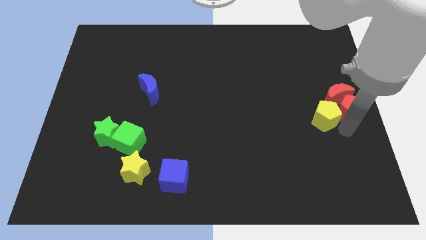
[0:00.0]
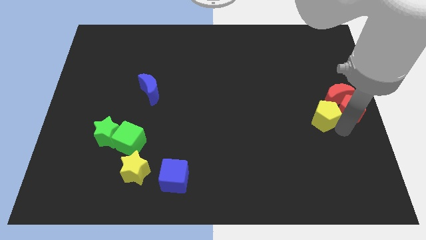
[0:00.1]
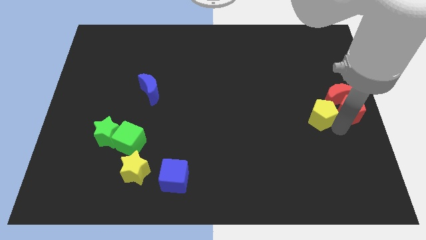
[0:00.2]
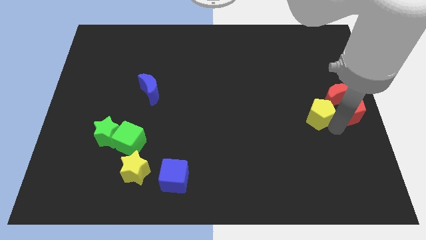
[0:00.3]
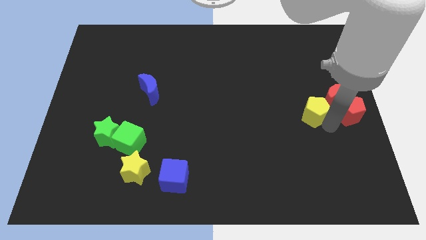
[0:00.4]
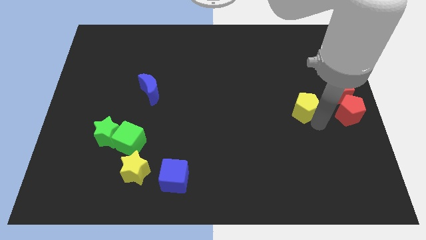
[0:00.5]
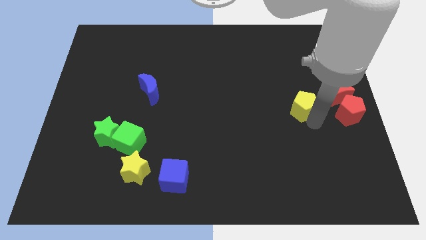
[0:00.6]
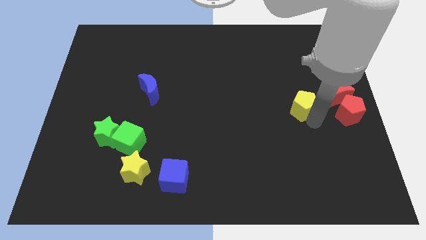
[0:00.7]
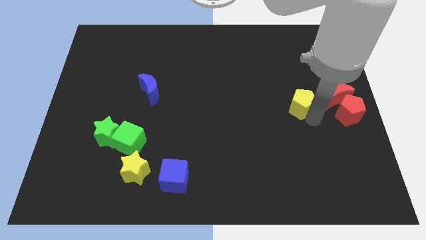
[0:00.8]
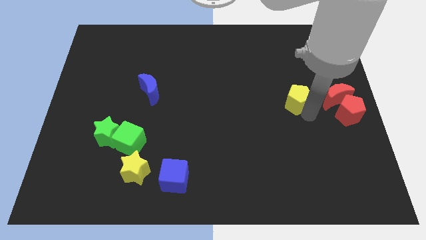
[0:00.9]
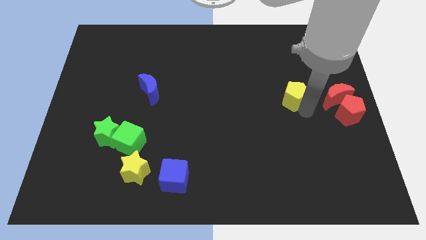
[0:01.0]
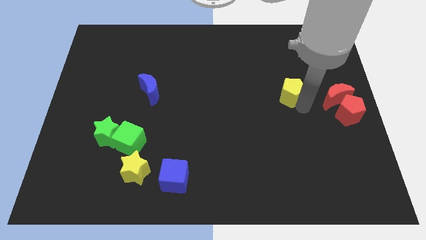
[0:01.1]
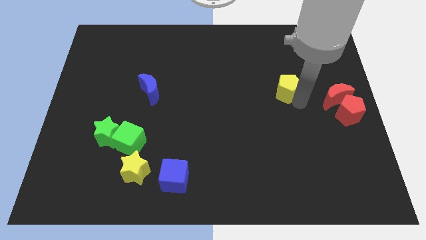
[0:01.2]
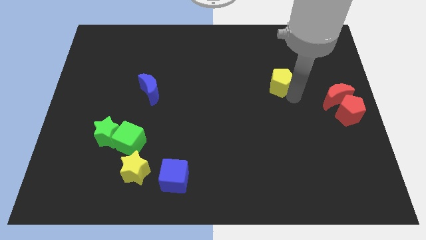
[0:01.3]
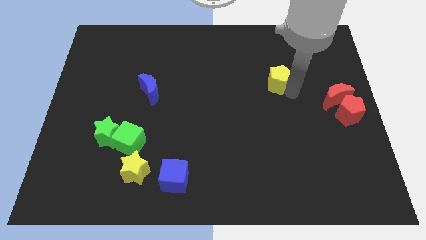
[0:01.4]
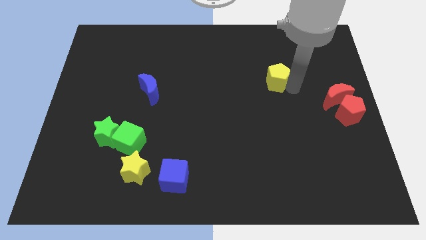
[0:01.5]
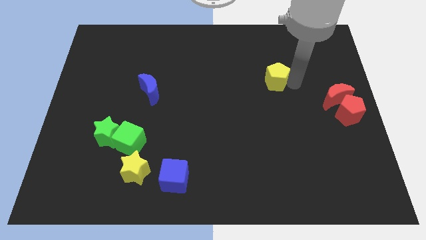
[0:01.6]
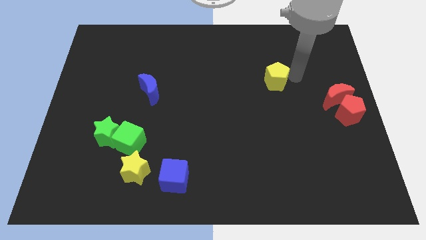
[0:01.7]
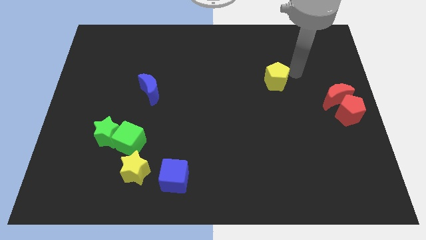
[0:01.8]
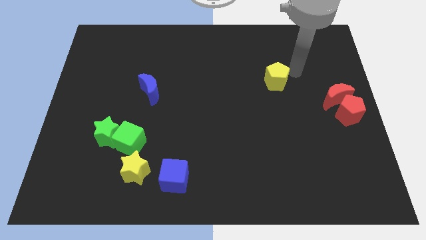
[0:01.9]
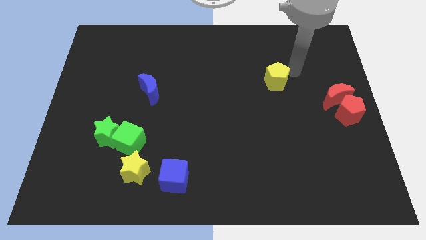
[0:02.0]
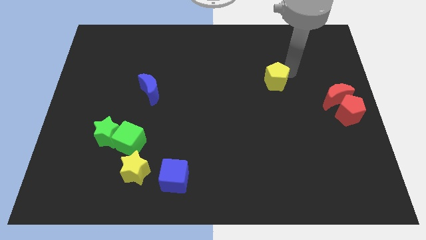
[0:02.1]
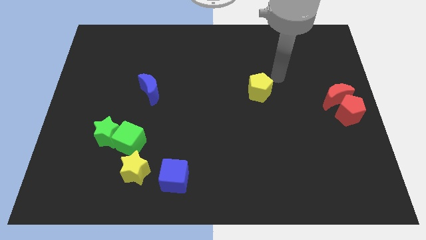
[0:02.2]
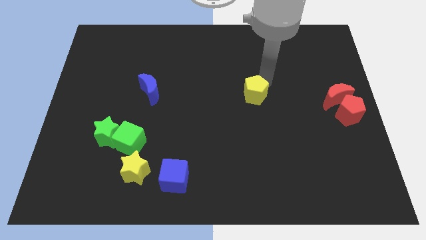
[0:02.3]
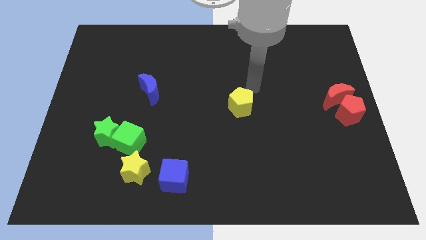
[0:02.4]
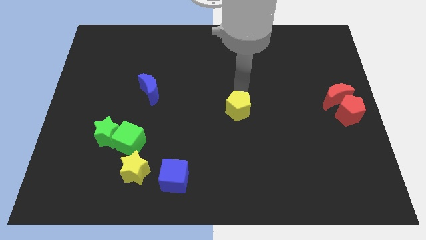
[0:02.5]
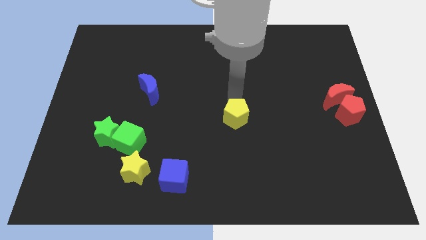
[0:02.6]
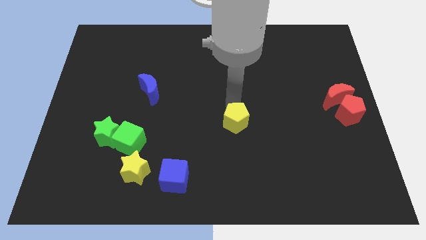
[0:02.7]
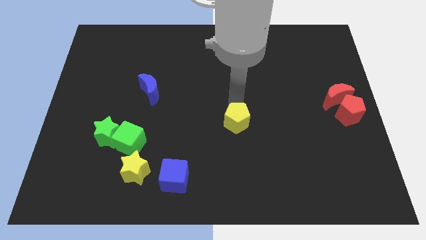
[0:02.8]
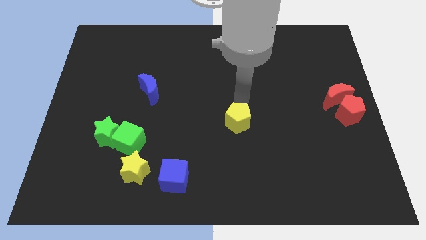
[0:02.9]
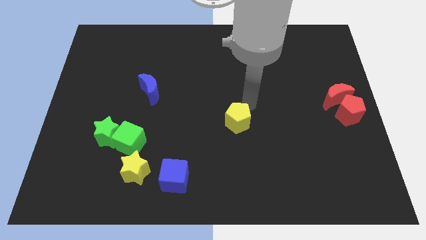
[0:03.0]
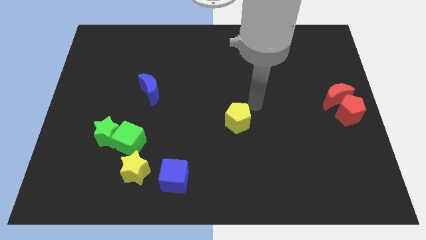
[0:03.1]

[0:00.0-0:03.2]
place the yellow pentagon at the center of the board

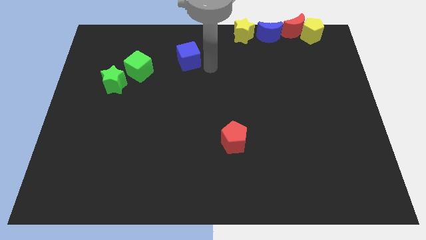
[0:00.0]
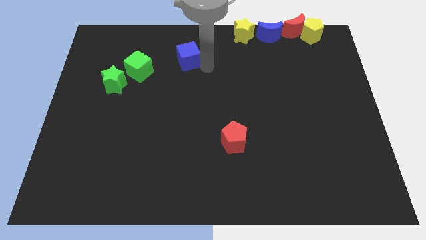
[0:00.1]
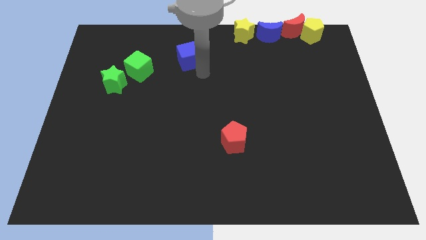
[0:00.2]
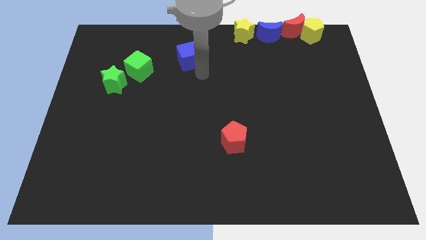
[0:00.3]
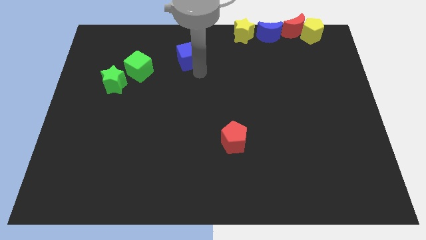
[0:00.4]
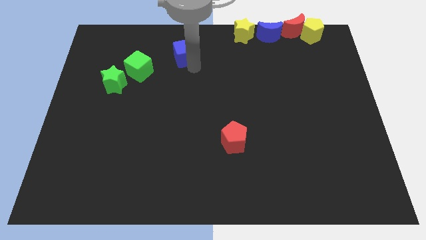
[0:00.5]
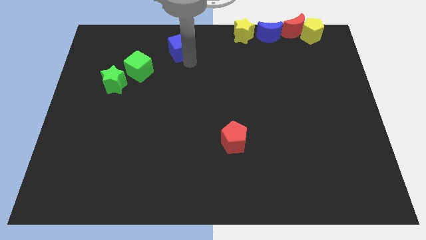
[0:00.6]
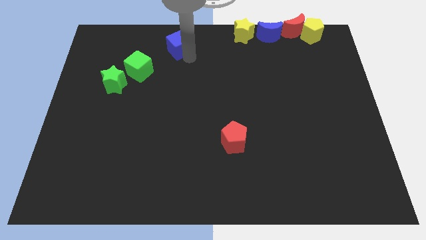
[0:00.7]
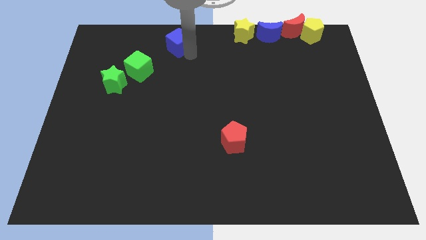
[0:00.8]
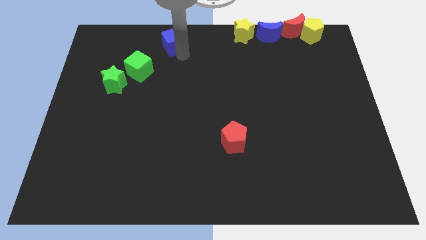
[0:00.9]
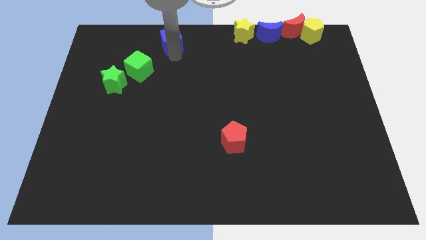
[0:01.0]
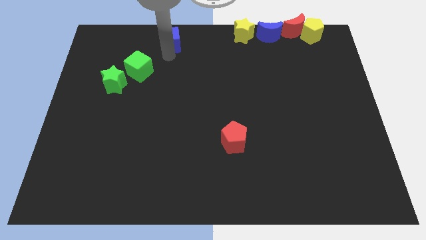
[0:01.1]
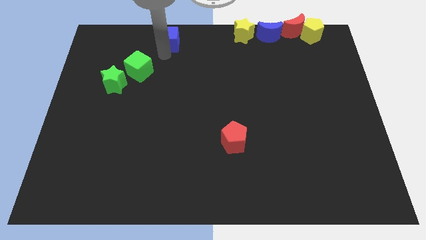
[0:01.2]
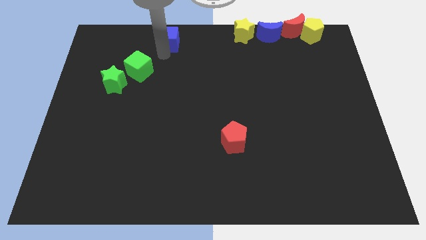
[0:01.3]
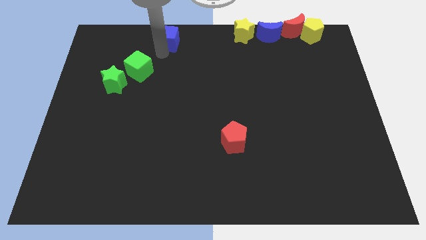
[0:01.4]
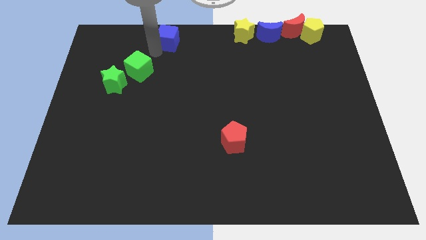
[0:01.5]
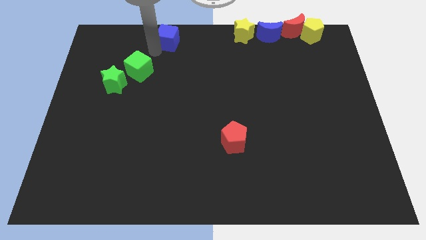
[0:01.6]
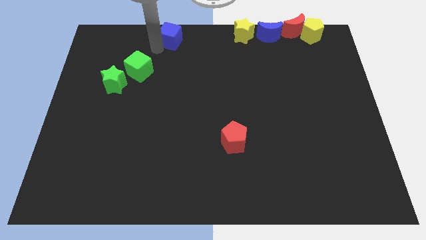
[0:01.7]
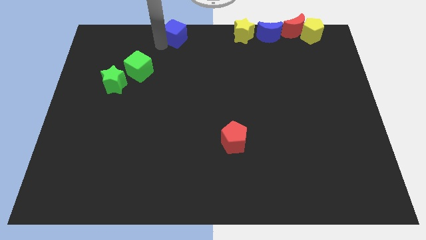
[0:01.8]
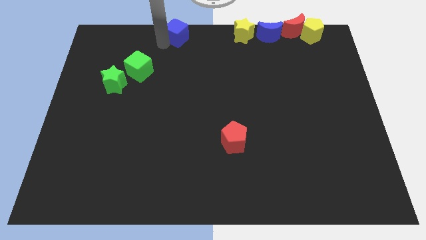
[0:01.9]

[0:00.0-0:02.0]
push the blue block to the top center of the board

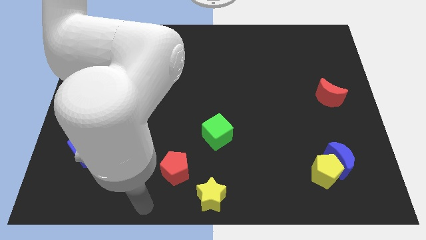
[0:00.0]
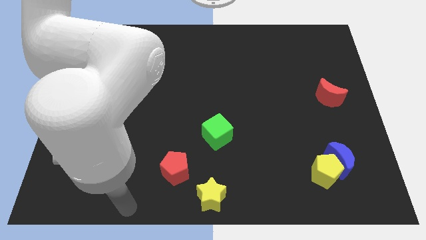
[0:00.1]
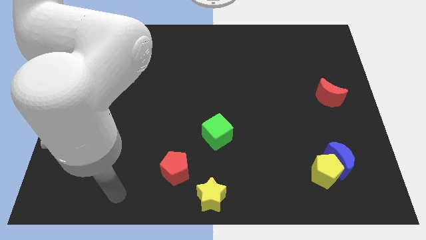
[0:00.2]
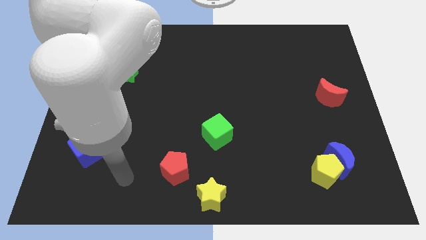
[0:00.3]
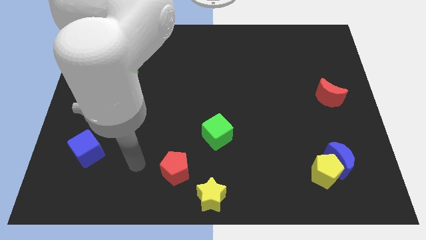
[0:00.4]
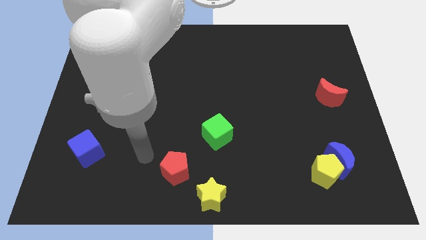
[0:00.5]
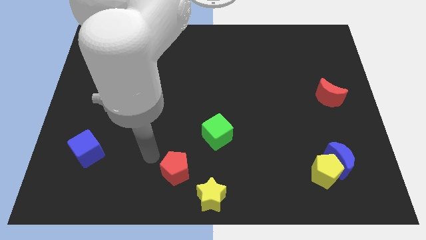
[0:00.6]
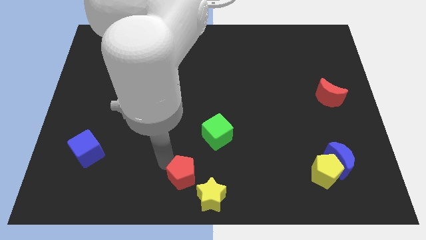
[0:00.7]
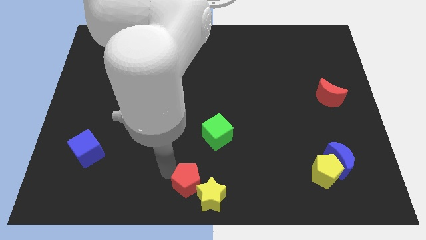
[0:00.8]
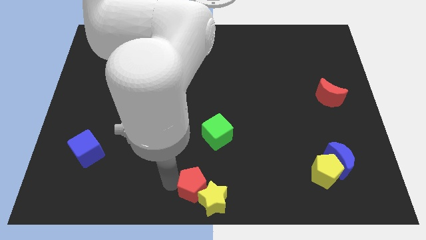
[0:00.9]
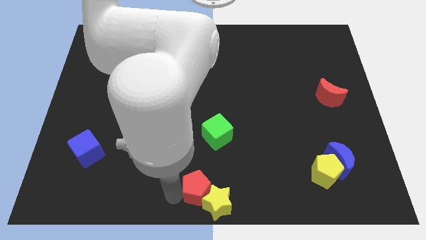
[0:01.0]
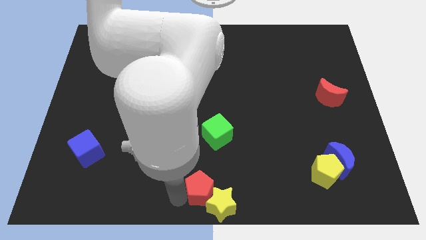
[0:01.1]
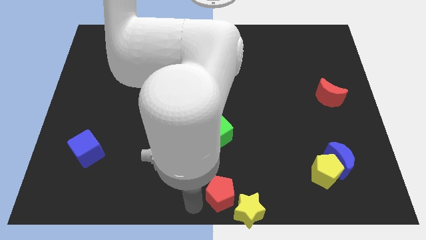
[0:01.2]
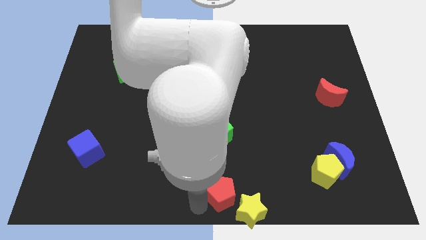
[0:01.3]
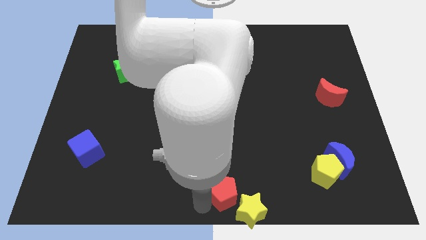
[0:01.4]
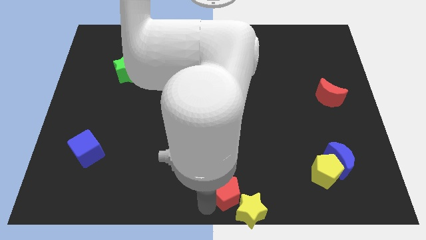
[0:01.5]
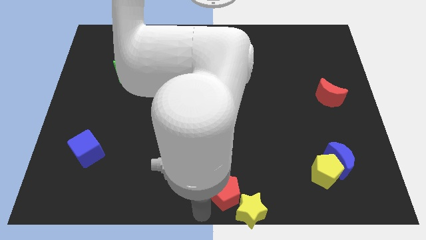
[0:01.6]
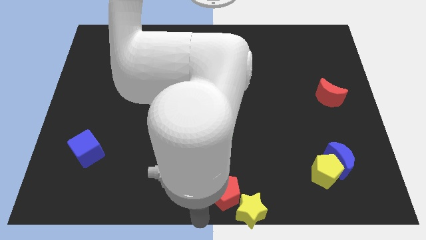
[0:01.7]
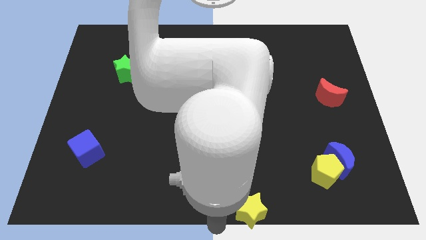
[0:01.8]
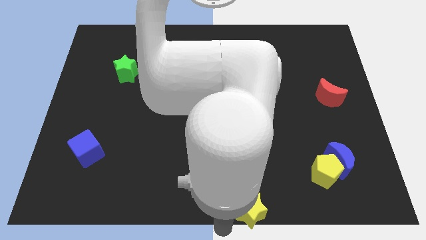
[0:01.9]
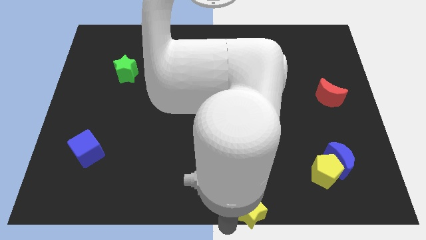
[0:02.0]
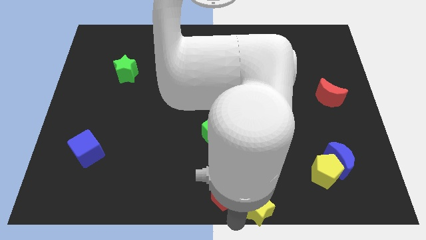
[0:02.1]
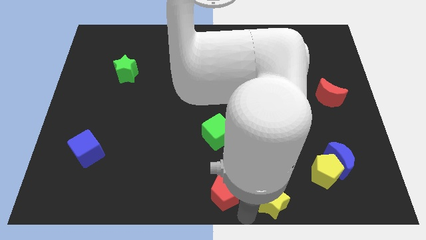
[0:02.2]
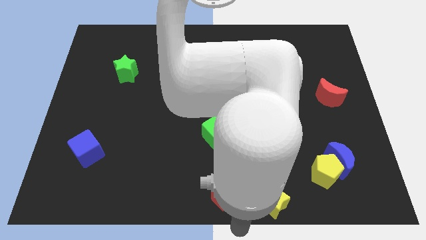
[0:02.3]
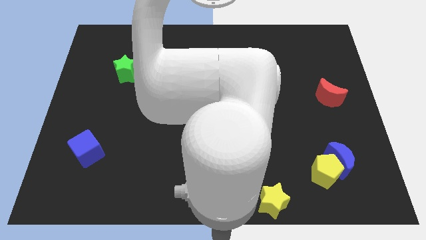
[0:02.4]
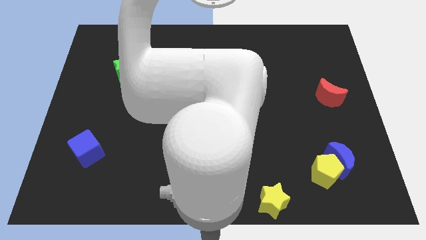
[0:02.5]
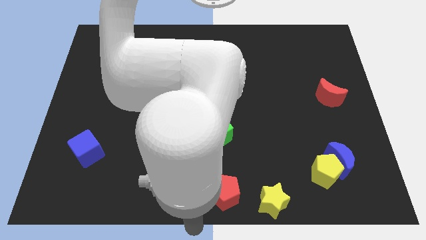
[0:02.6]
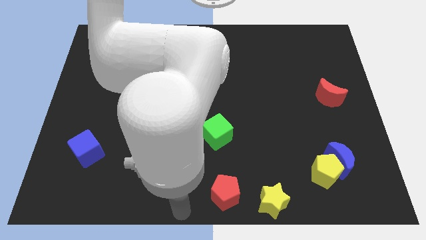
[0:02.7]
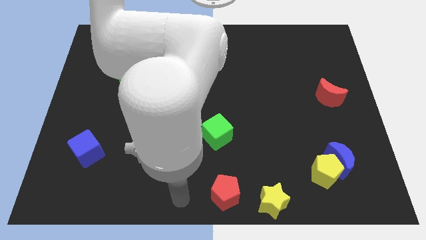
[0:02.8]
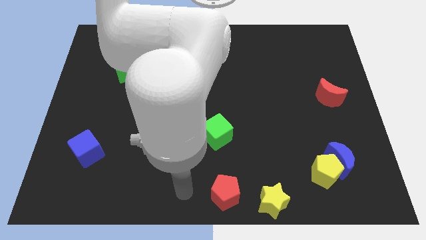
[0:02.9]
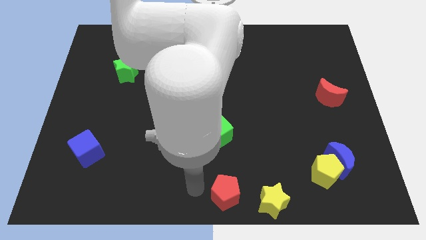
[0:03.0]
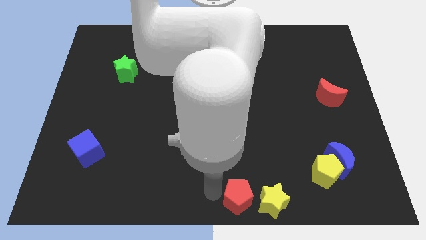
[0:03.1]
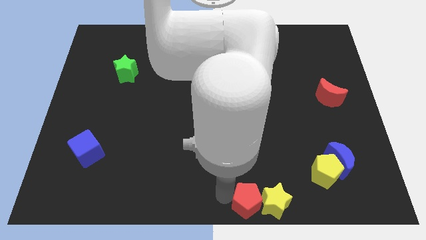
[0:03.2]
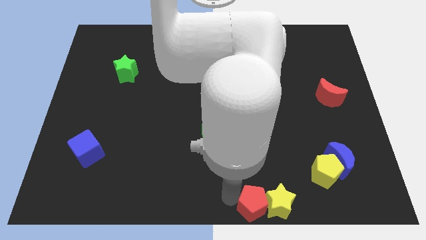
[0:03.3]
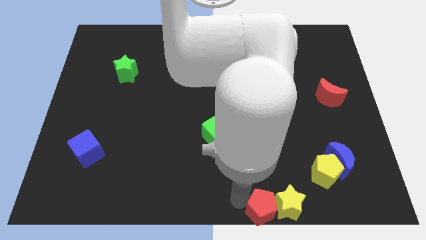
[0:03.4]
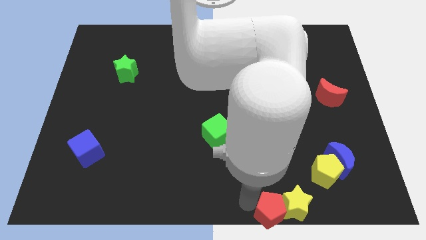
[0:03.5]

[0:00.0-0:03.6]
move the red pentagon and yellow star to the right

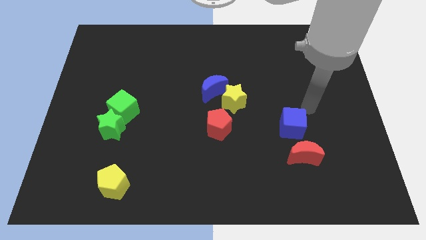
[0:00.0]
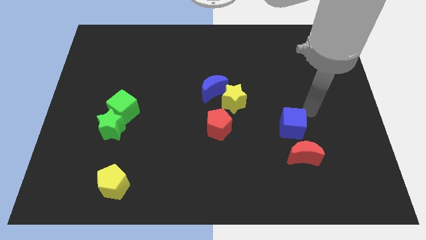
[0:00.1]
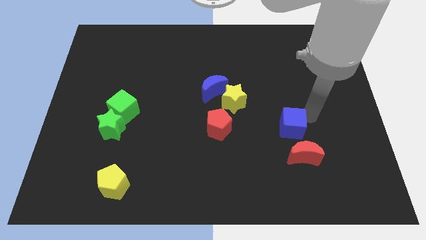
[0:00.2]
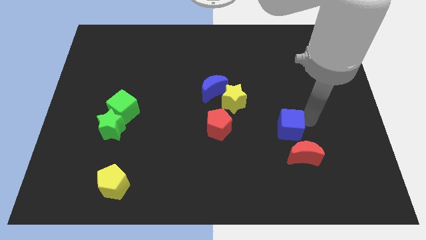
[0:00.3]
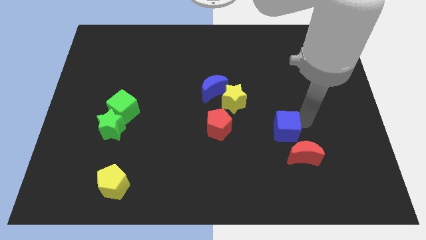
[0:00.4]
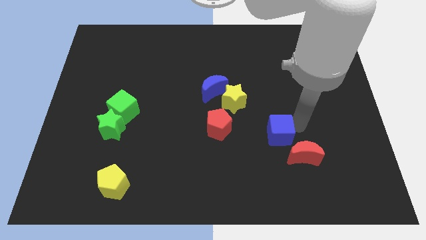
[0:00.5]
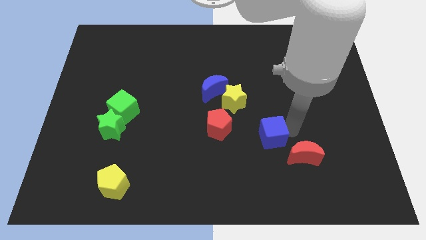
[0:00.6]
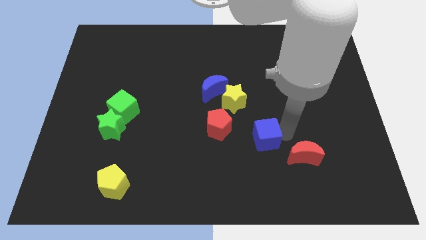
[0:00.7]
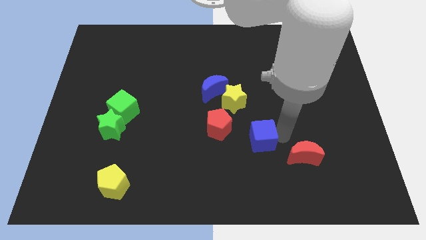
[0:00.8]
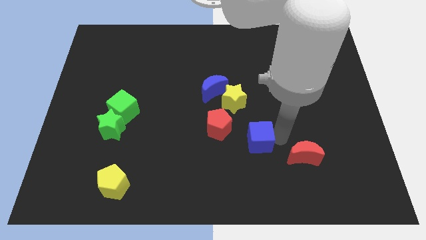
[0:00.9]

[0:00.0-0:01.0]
place the blue cube in between the red pentagon and red crescent
